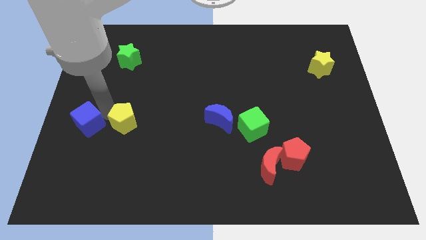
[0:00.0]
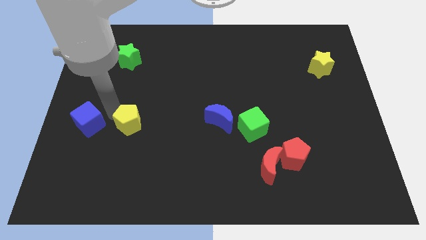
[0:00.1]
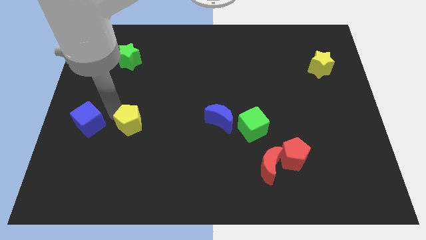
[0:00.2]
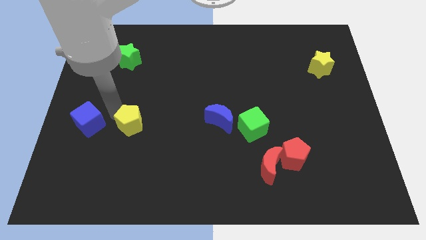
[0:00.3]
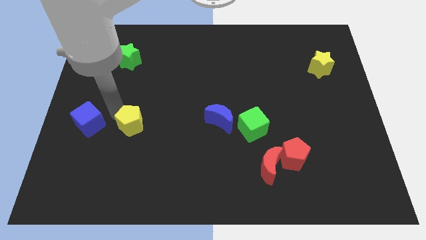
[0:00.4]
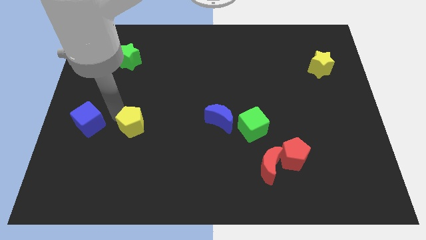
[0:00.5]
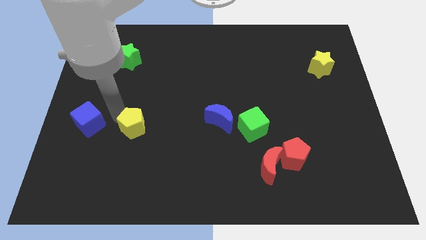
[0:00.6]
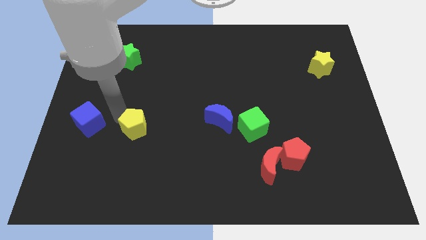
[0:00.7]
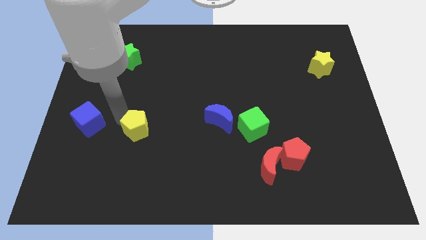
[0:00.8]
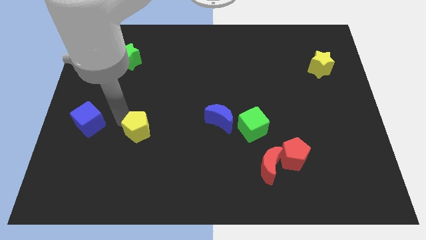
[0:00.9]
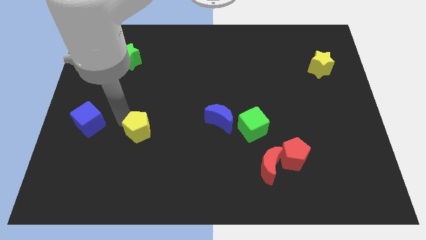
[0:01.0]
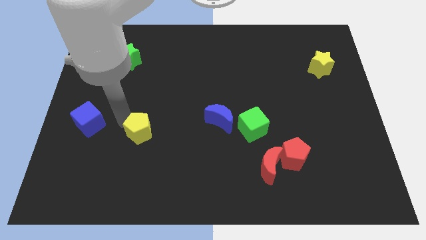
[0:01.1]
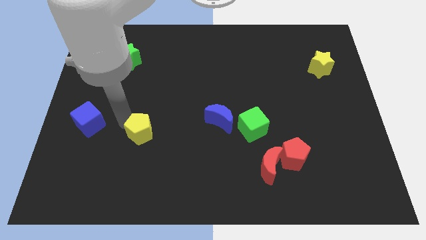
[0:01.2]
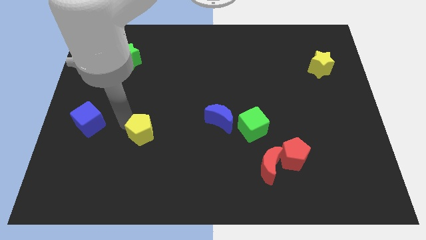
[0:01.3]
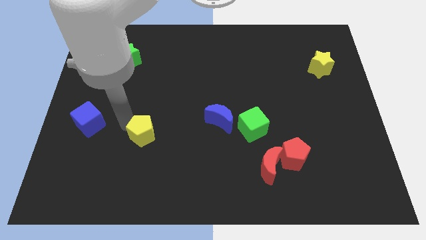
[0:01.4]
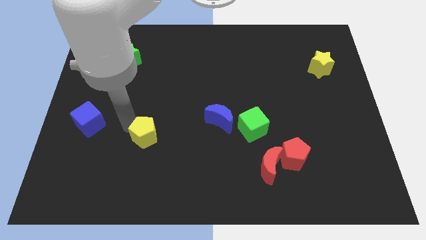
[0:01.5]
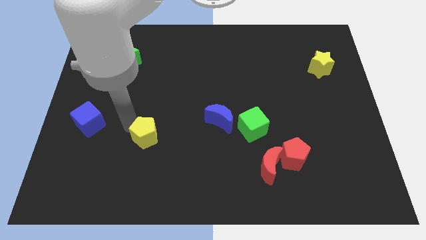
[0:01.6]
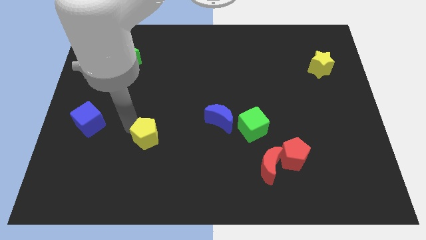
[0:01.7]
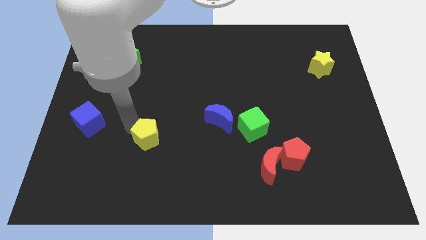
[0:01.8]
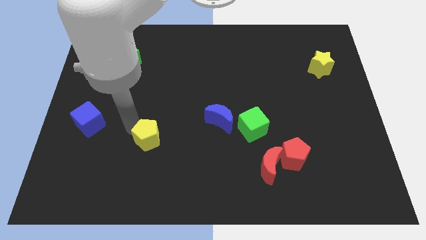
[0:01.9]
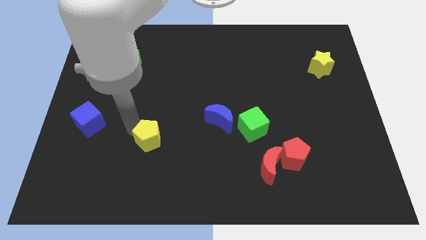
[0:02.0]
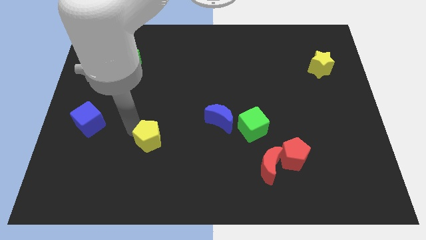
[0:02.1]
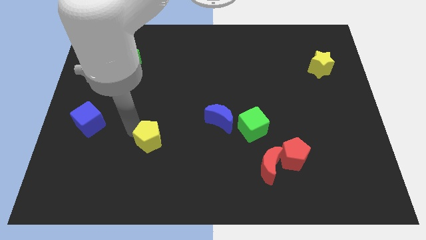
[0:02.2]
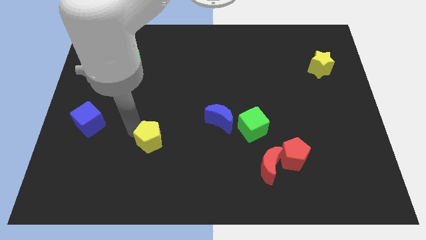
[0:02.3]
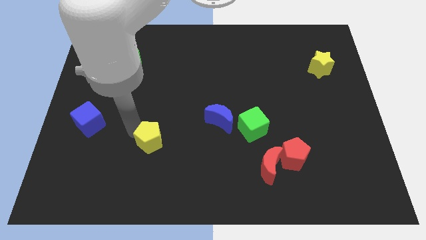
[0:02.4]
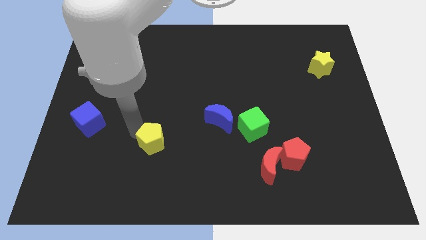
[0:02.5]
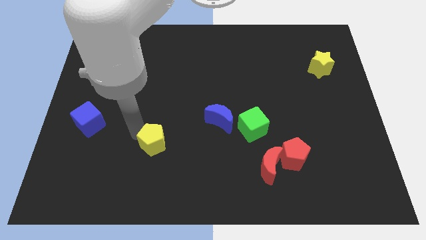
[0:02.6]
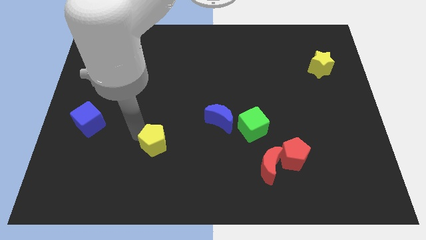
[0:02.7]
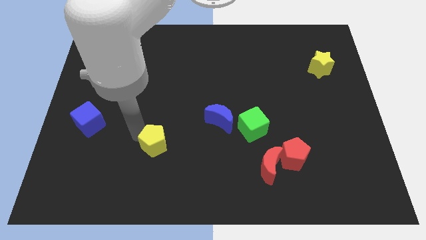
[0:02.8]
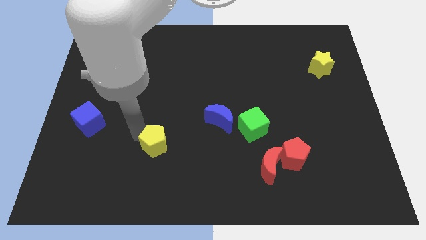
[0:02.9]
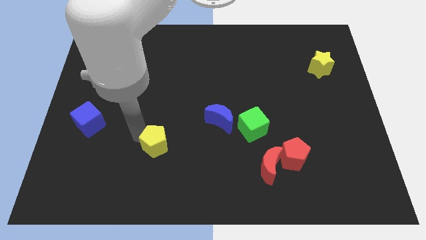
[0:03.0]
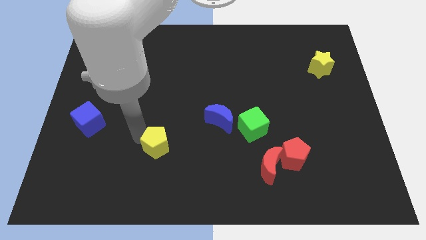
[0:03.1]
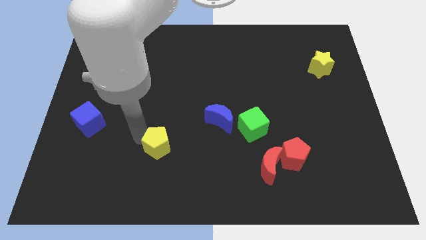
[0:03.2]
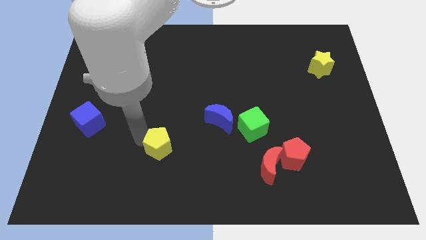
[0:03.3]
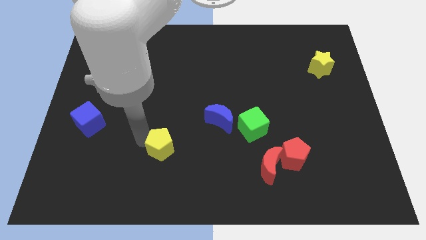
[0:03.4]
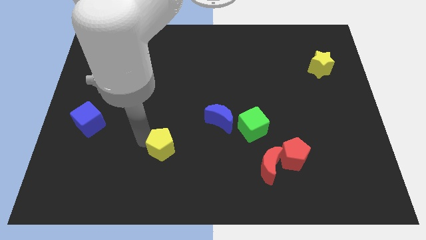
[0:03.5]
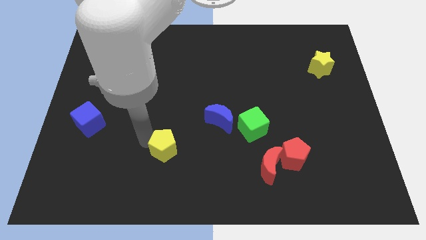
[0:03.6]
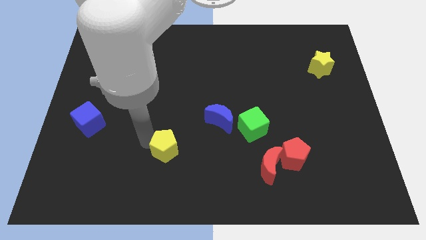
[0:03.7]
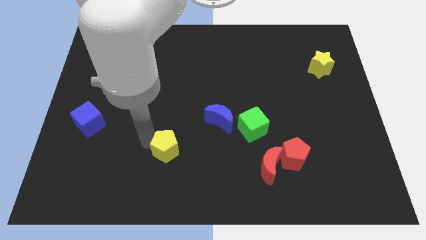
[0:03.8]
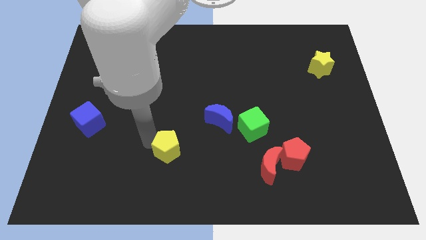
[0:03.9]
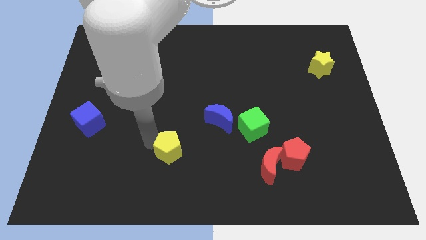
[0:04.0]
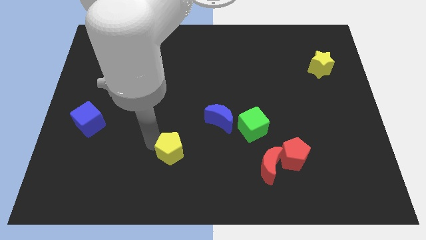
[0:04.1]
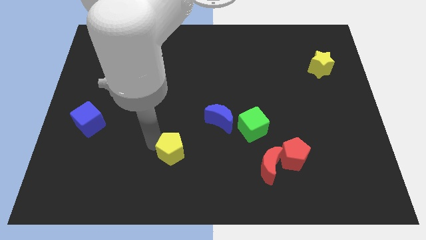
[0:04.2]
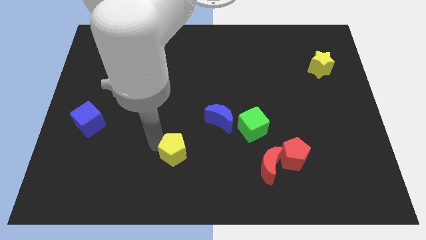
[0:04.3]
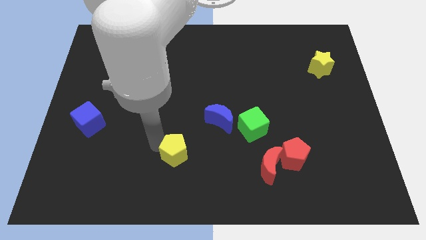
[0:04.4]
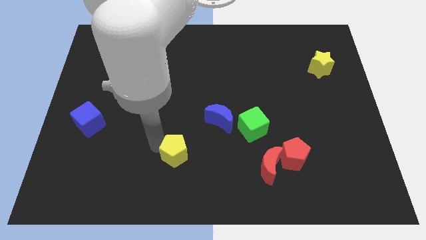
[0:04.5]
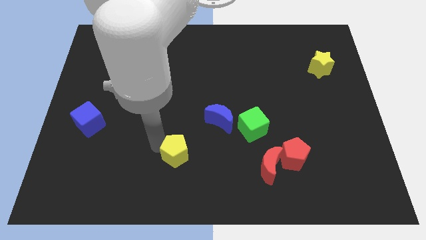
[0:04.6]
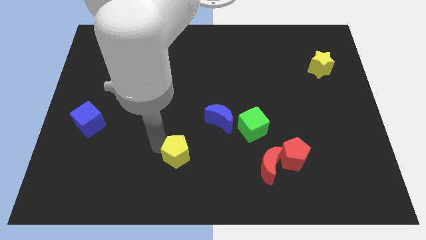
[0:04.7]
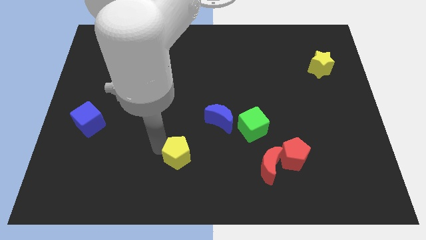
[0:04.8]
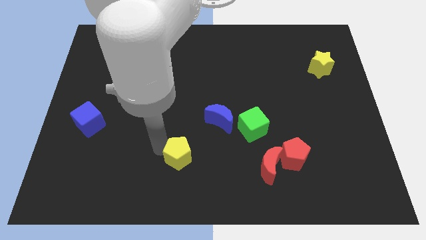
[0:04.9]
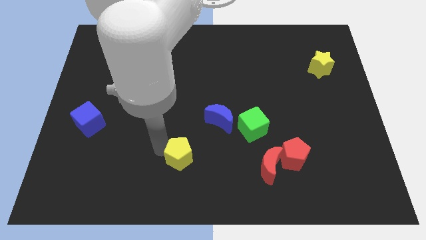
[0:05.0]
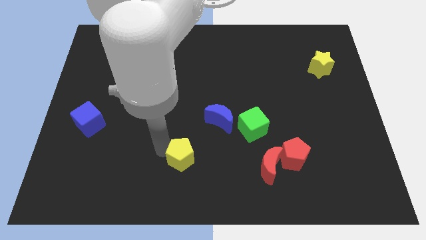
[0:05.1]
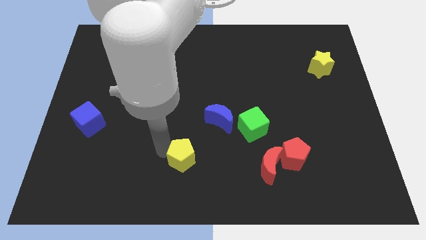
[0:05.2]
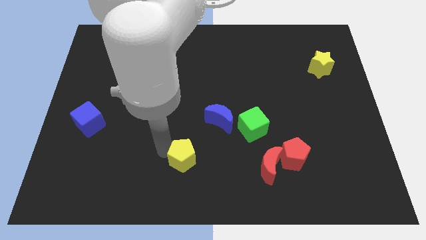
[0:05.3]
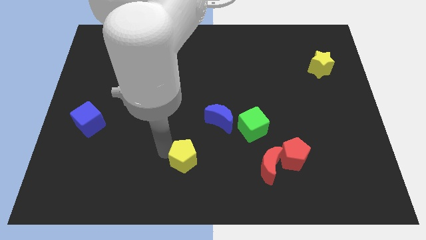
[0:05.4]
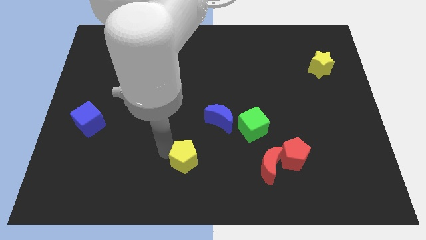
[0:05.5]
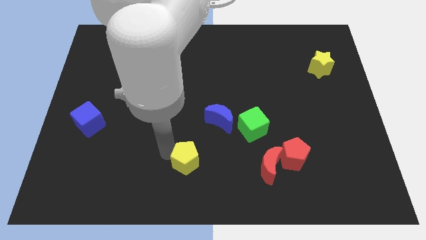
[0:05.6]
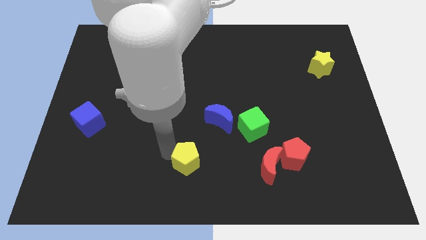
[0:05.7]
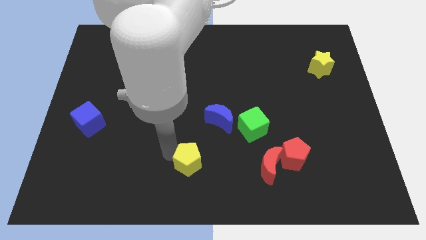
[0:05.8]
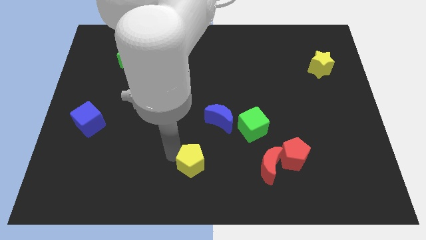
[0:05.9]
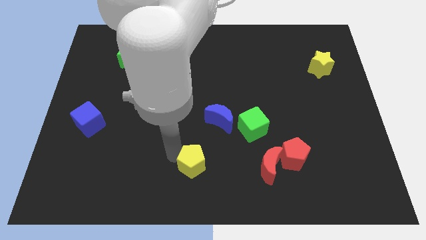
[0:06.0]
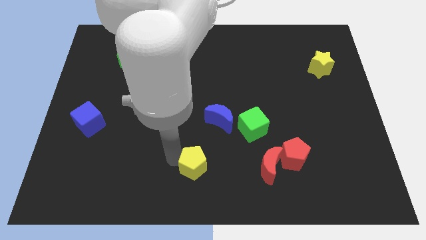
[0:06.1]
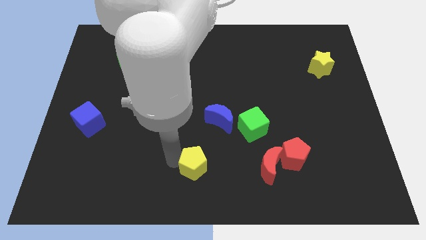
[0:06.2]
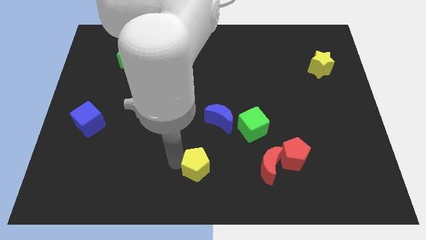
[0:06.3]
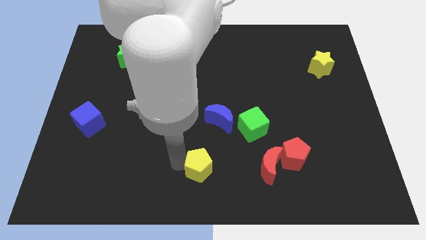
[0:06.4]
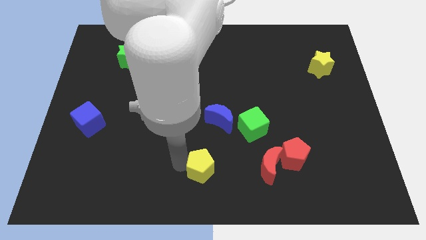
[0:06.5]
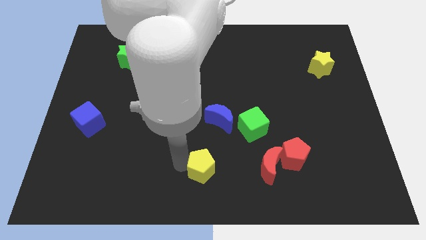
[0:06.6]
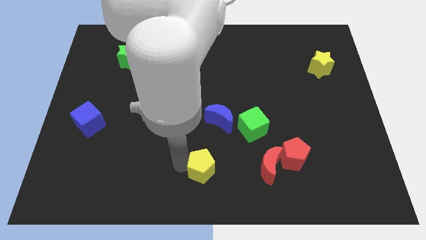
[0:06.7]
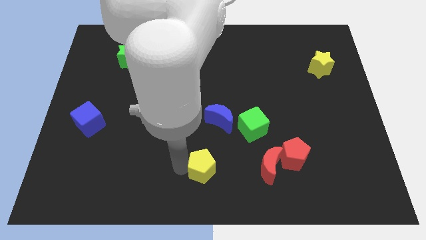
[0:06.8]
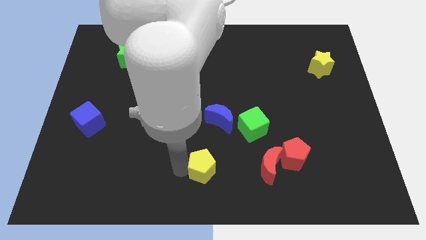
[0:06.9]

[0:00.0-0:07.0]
push the yellow pentagon towards the bottom center of the board

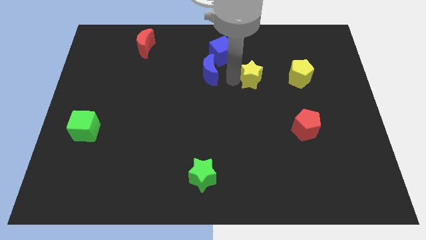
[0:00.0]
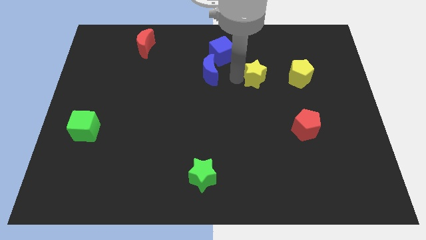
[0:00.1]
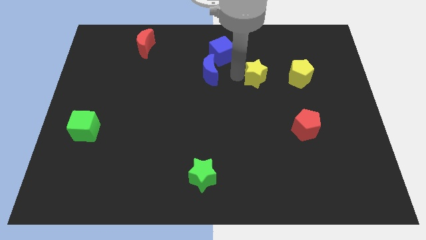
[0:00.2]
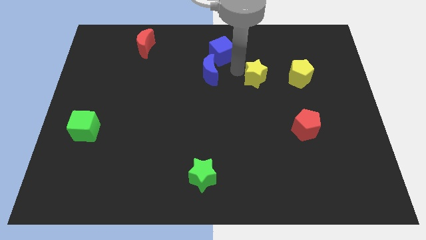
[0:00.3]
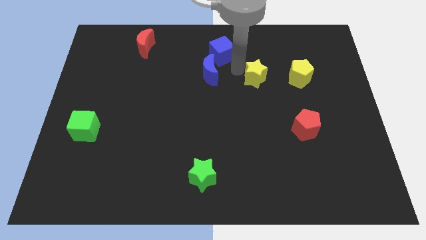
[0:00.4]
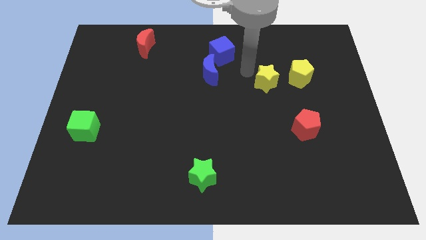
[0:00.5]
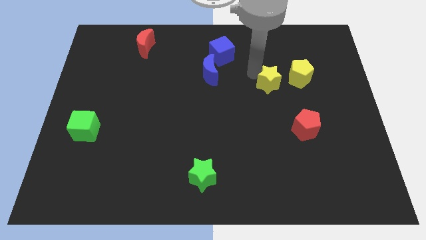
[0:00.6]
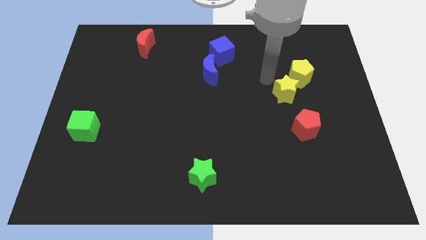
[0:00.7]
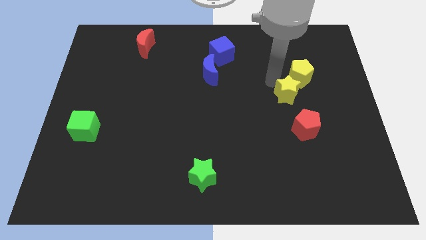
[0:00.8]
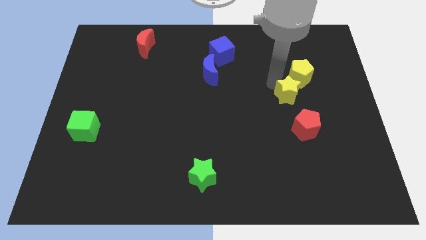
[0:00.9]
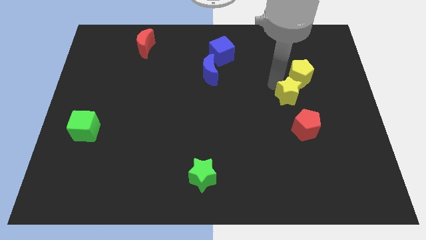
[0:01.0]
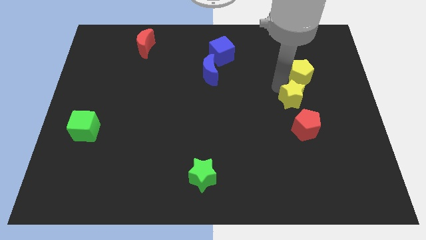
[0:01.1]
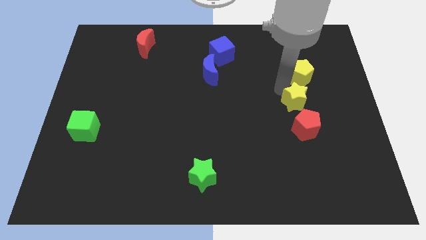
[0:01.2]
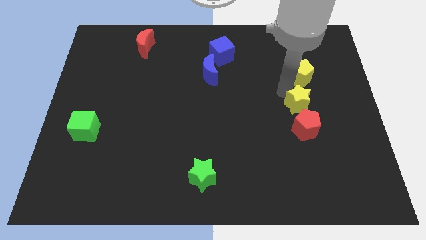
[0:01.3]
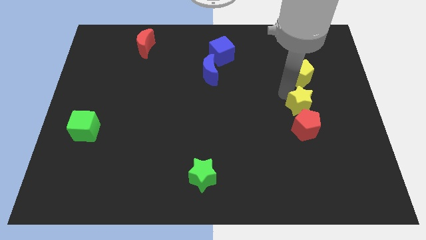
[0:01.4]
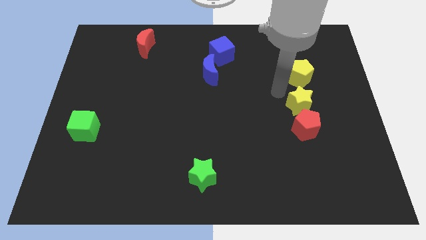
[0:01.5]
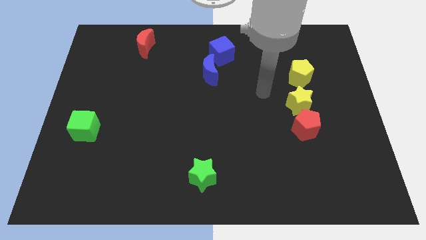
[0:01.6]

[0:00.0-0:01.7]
move the yellow star in between of yellow pentagon red pentagon

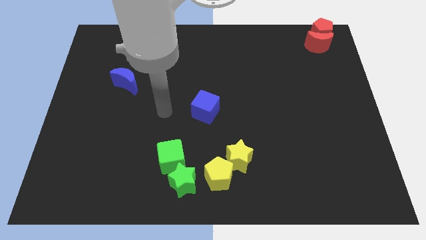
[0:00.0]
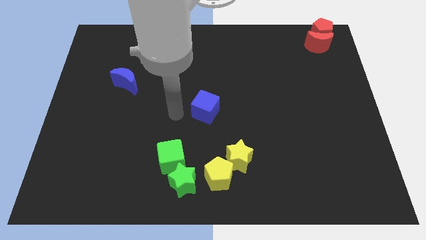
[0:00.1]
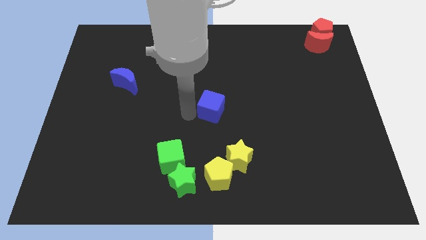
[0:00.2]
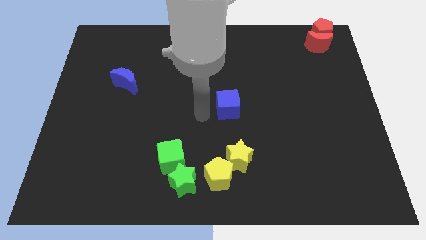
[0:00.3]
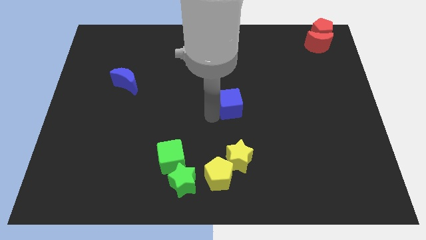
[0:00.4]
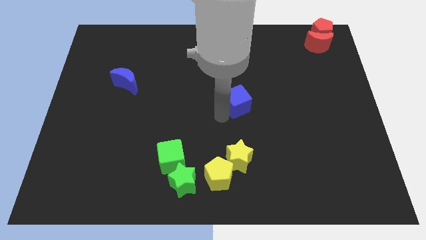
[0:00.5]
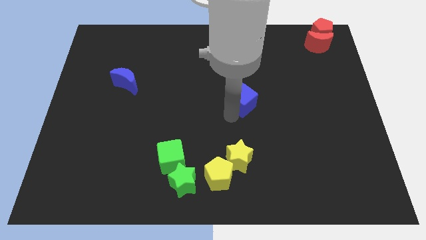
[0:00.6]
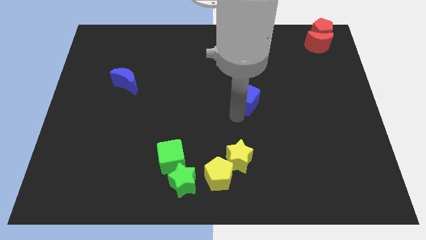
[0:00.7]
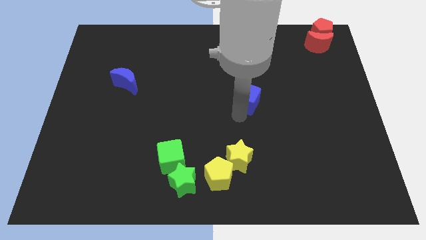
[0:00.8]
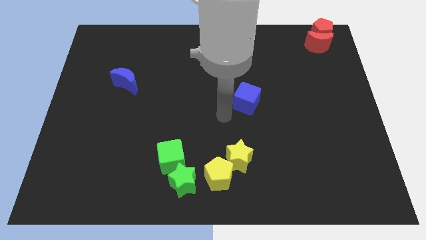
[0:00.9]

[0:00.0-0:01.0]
put the blue cube vertically above the yellow star
